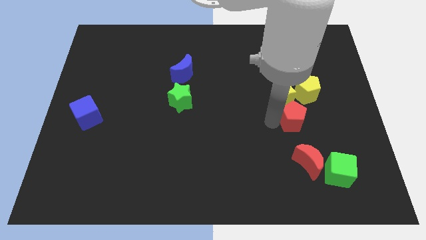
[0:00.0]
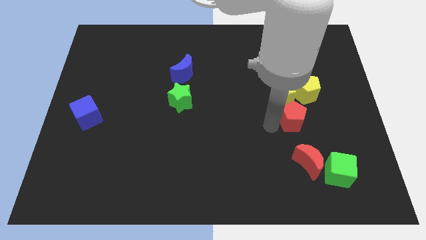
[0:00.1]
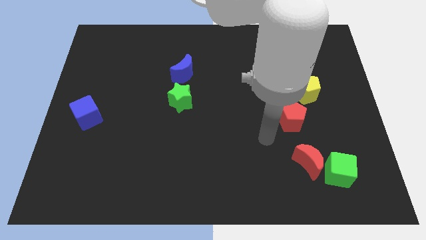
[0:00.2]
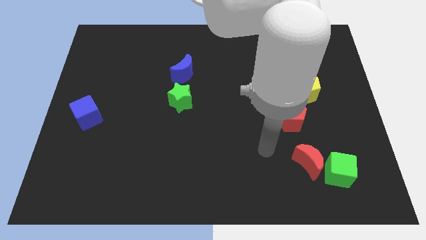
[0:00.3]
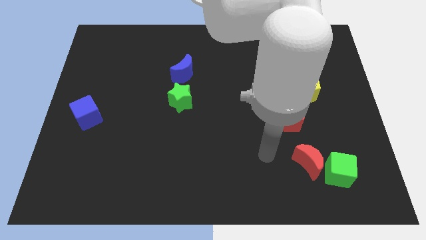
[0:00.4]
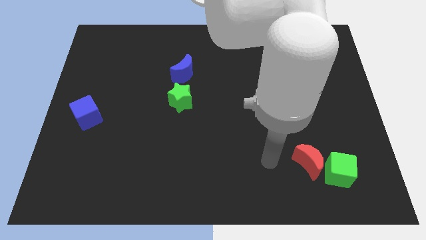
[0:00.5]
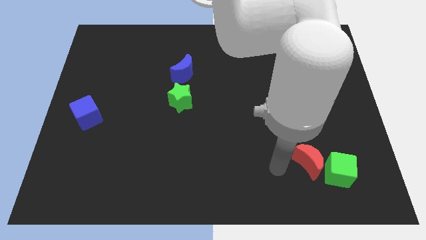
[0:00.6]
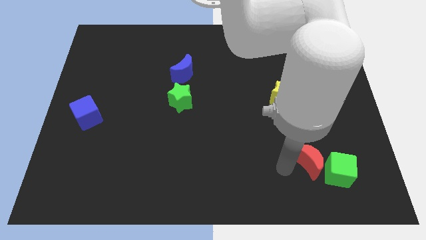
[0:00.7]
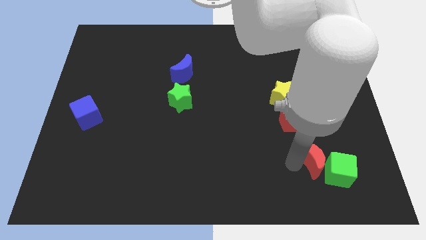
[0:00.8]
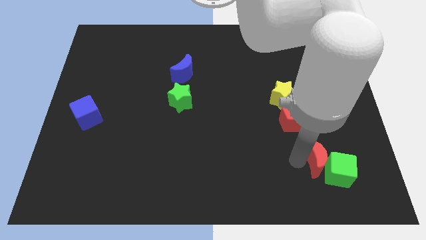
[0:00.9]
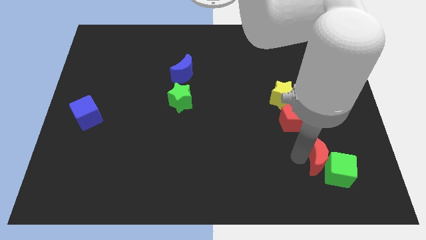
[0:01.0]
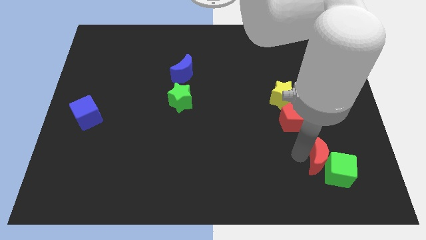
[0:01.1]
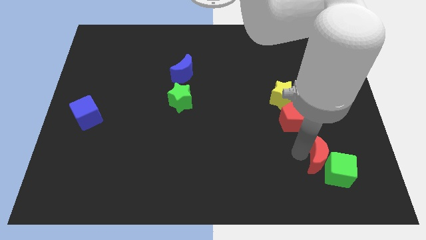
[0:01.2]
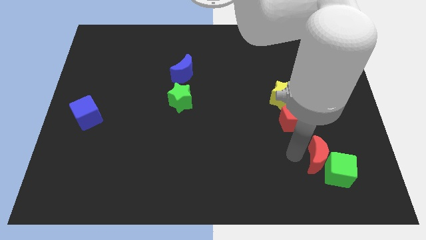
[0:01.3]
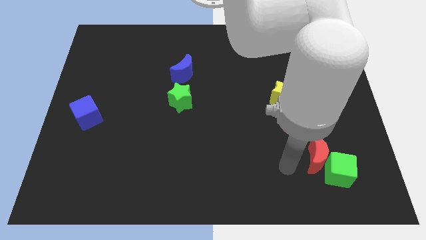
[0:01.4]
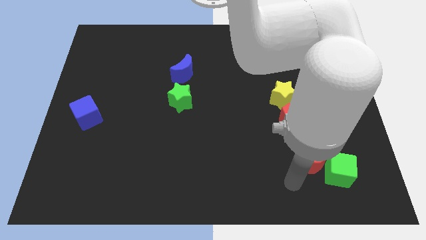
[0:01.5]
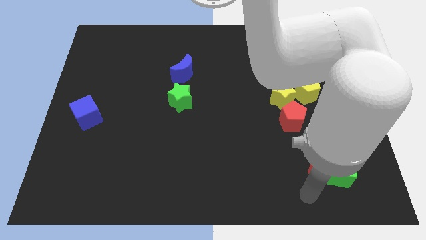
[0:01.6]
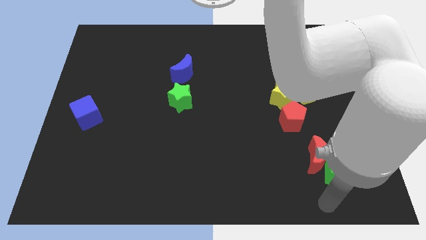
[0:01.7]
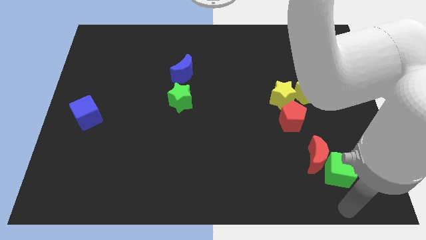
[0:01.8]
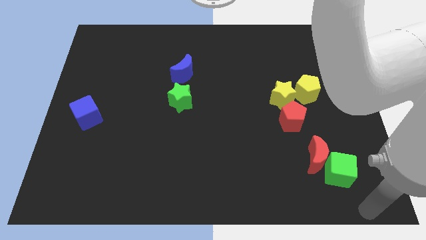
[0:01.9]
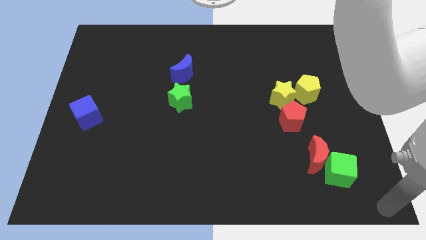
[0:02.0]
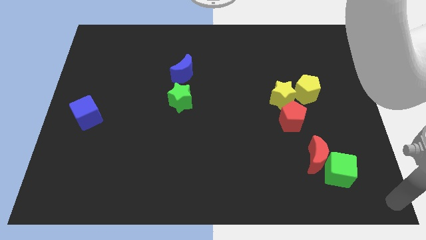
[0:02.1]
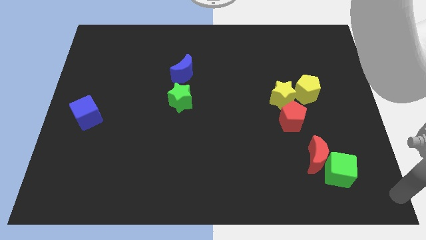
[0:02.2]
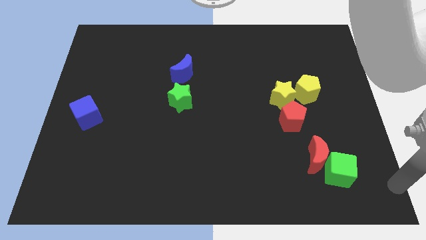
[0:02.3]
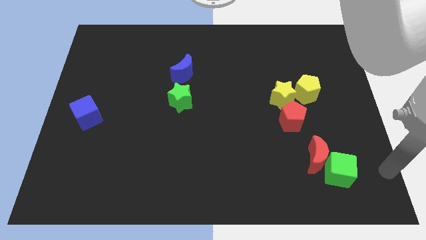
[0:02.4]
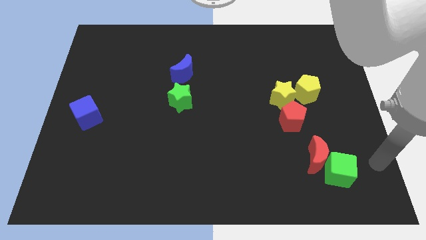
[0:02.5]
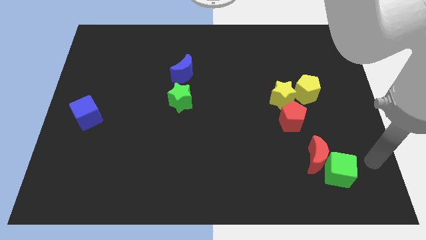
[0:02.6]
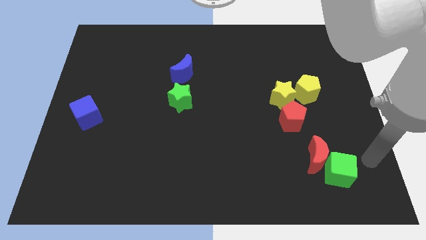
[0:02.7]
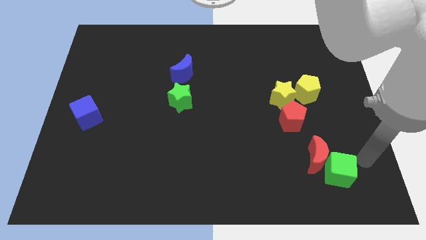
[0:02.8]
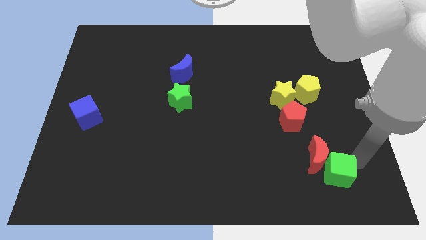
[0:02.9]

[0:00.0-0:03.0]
move the red moon slightly close to the green cube

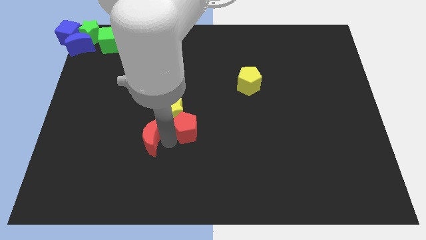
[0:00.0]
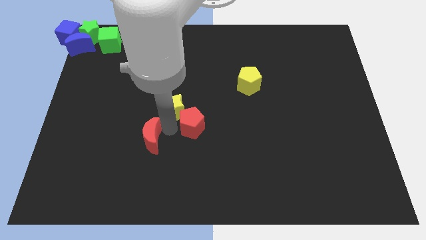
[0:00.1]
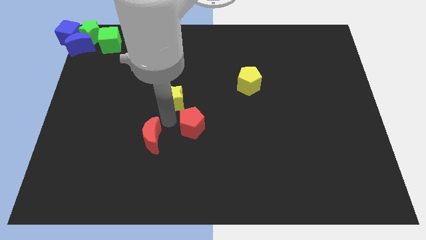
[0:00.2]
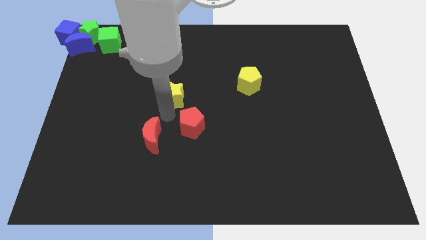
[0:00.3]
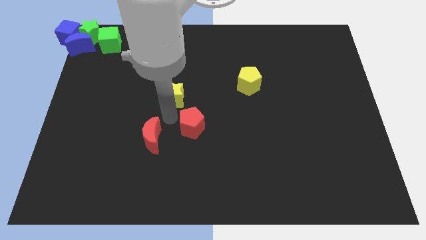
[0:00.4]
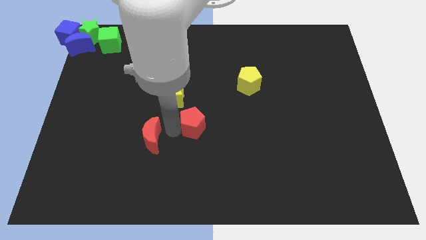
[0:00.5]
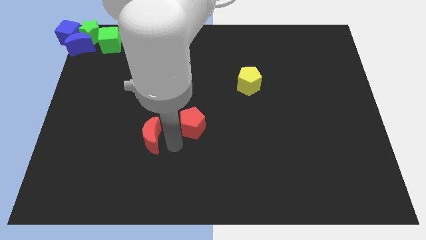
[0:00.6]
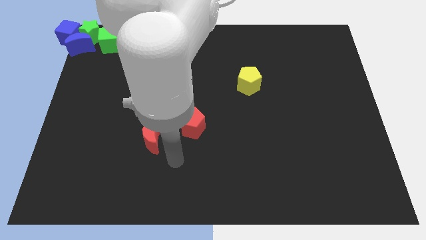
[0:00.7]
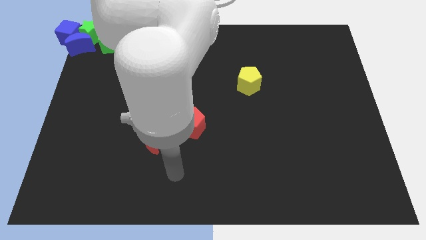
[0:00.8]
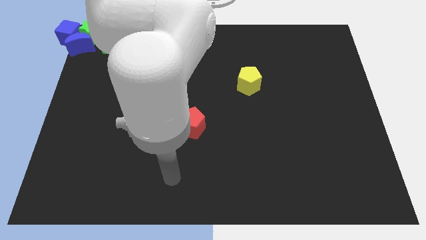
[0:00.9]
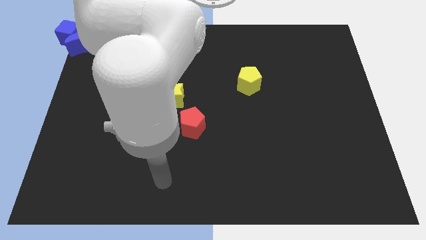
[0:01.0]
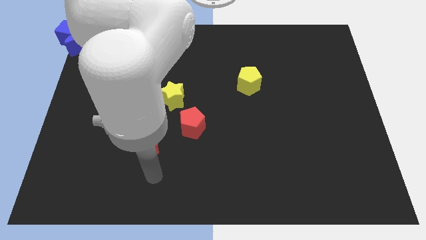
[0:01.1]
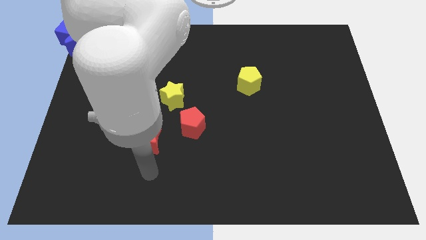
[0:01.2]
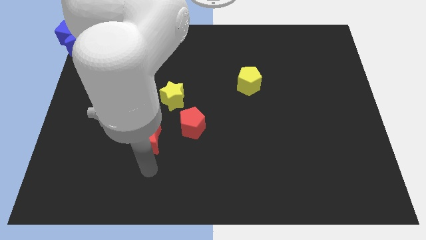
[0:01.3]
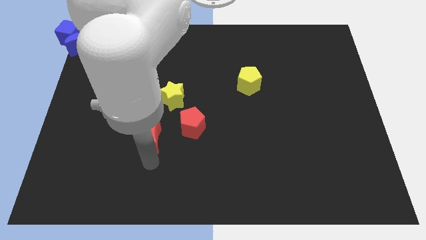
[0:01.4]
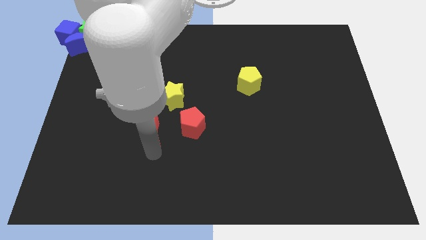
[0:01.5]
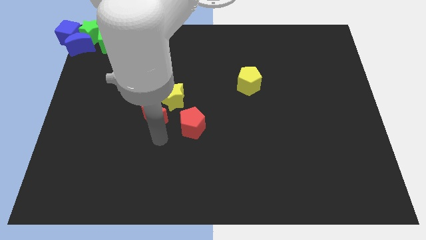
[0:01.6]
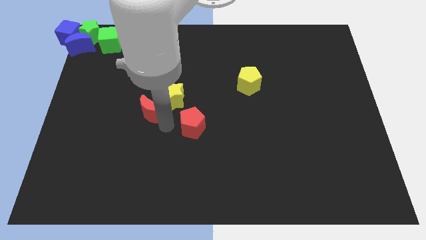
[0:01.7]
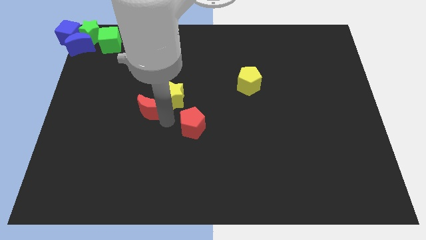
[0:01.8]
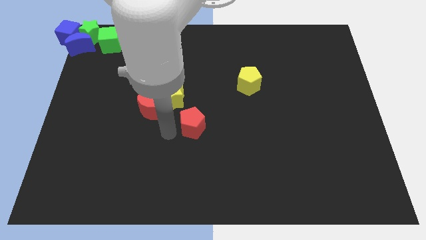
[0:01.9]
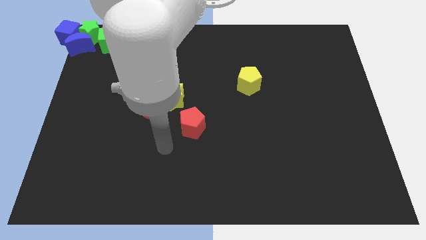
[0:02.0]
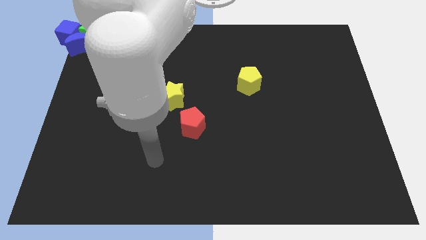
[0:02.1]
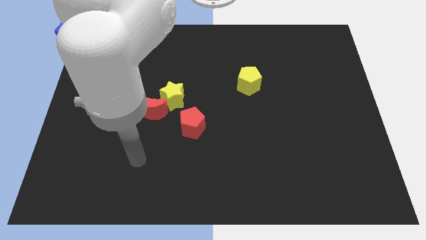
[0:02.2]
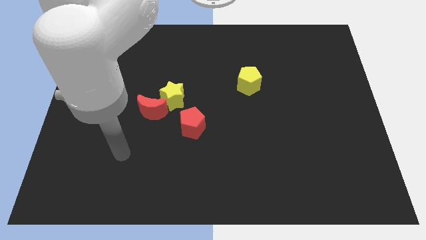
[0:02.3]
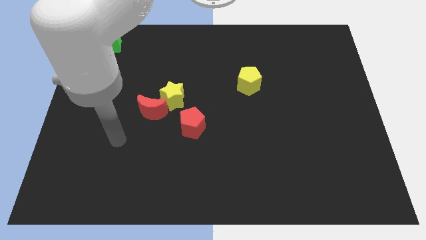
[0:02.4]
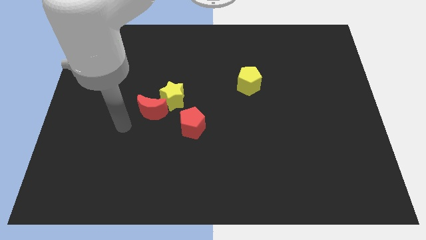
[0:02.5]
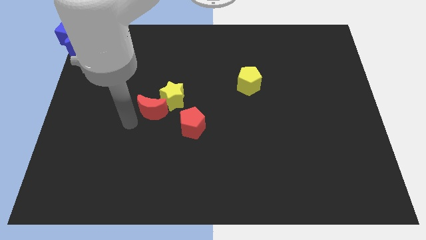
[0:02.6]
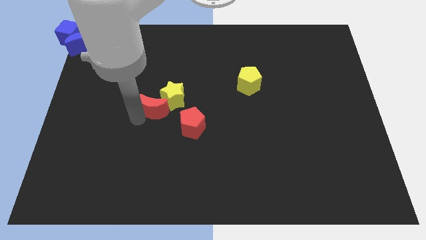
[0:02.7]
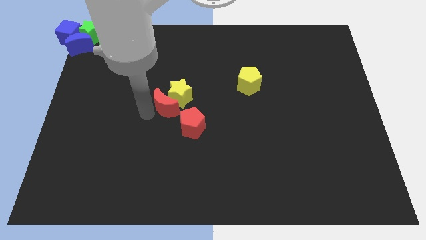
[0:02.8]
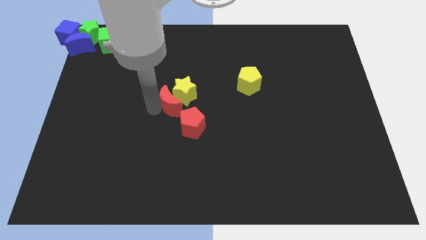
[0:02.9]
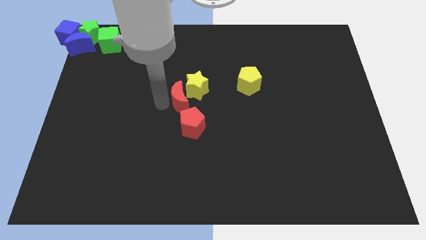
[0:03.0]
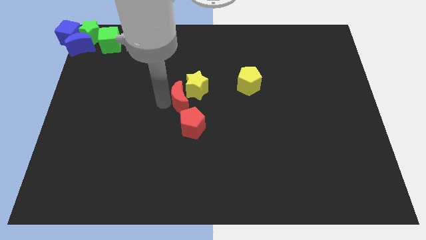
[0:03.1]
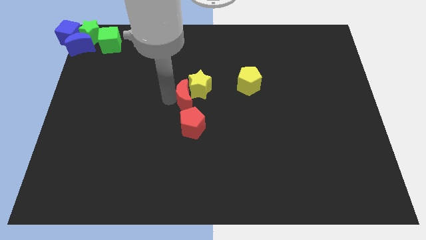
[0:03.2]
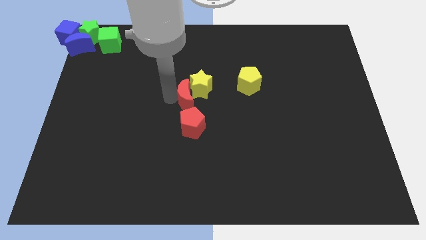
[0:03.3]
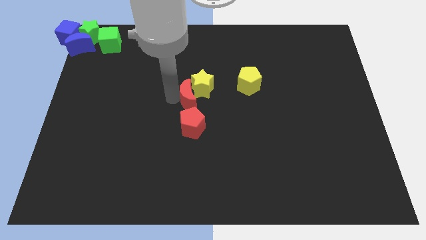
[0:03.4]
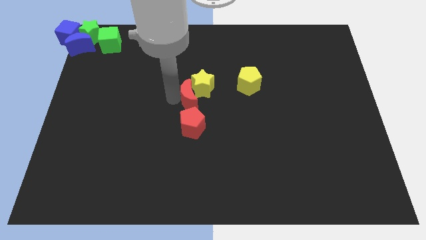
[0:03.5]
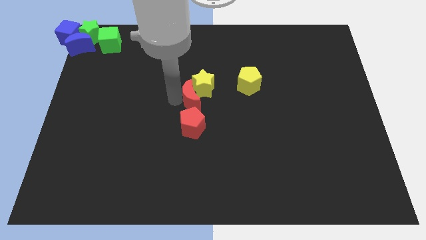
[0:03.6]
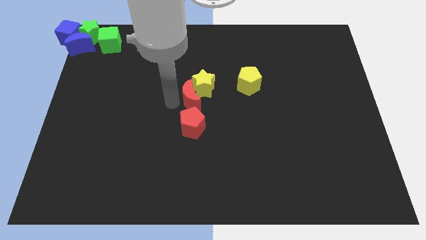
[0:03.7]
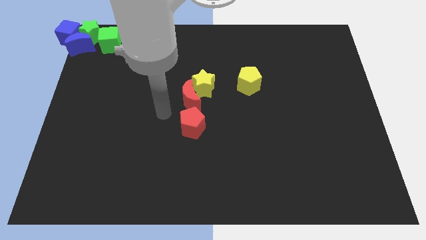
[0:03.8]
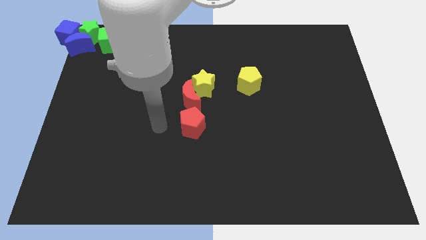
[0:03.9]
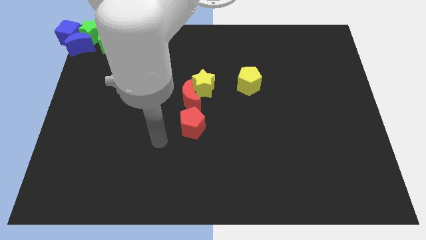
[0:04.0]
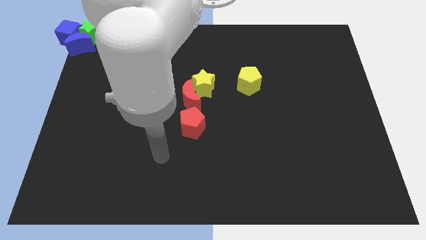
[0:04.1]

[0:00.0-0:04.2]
place the yellow star and red moon above red pentagon

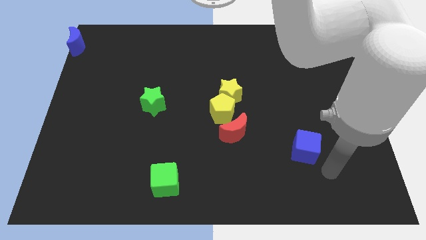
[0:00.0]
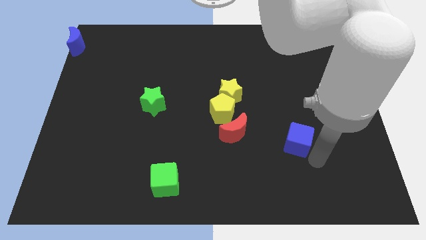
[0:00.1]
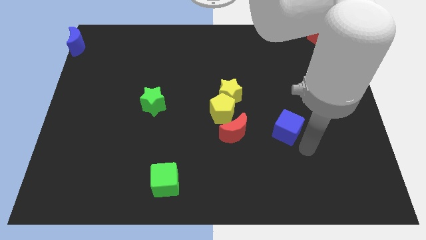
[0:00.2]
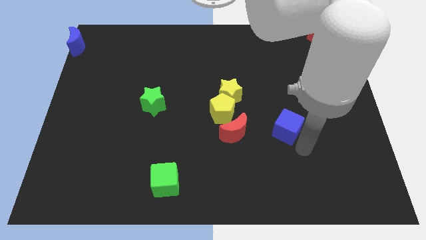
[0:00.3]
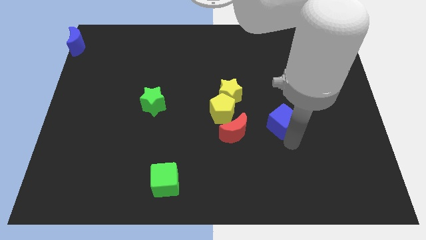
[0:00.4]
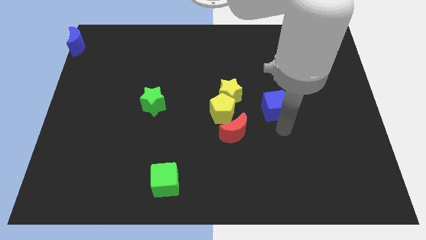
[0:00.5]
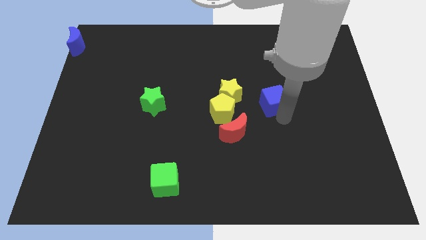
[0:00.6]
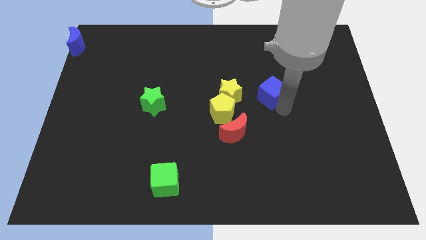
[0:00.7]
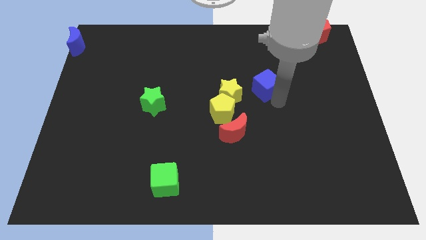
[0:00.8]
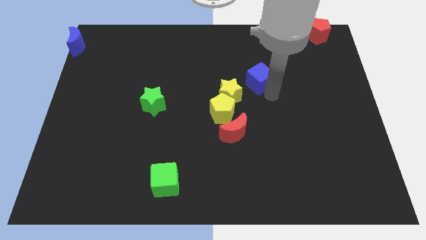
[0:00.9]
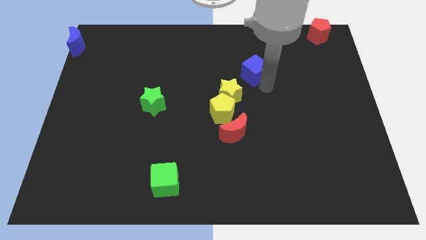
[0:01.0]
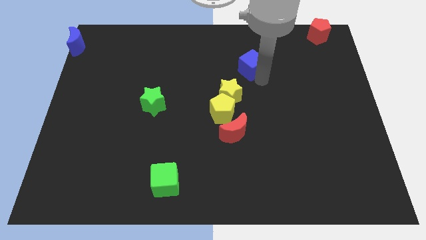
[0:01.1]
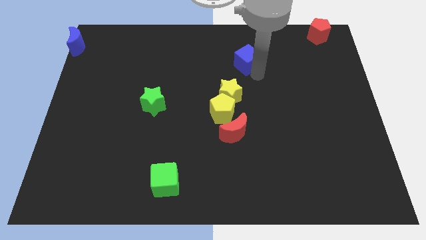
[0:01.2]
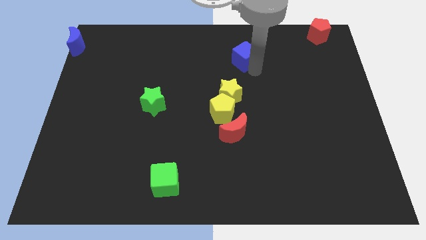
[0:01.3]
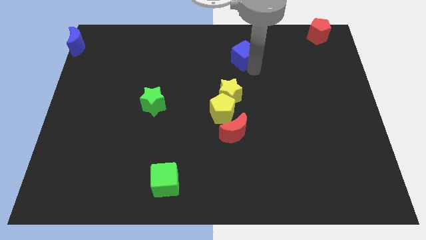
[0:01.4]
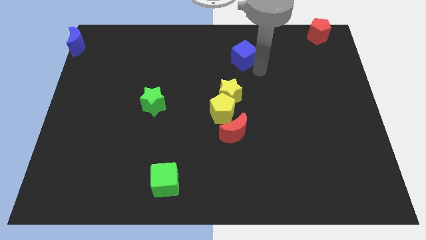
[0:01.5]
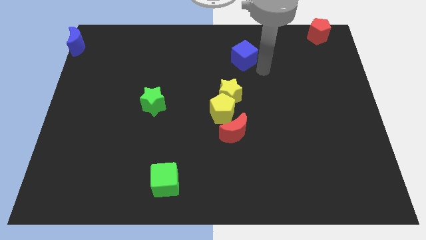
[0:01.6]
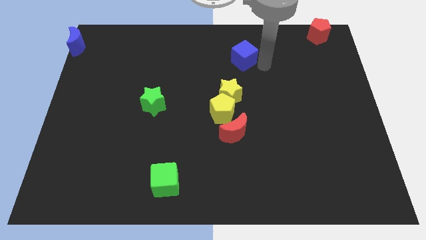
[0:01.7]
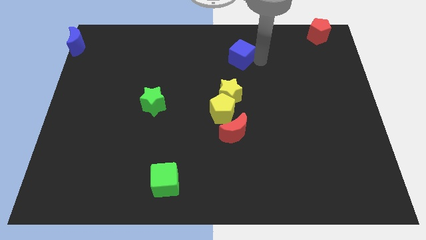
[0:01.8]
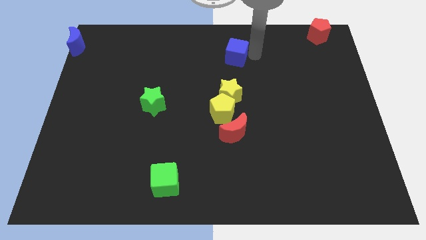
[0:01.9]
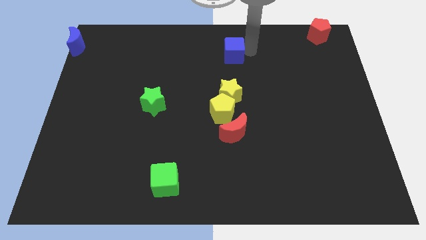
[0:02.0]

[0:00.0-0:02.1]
move the blue cube towards the top center
